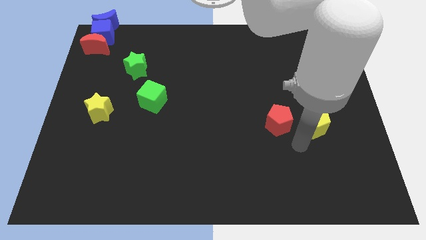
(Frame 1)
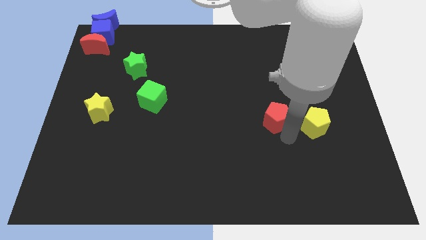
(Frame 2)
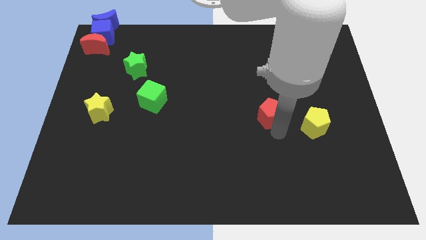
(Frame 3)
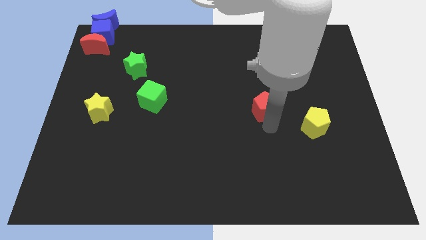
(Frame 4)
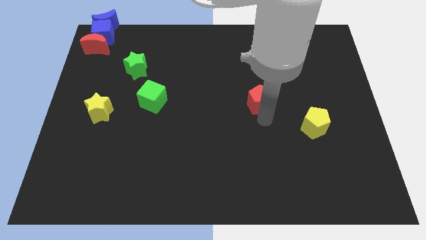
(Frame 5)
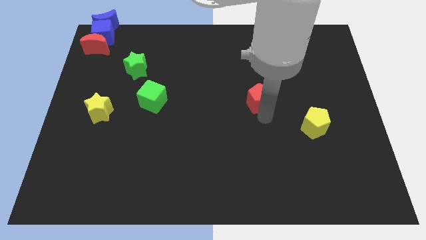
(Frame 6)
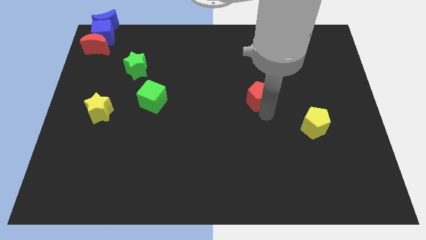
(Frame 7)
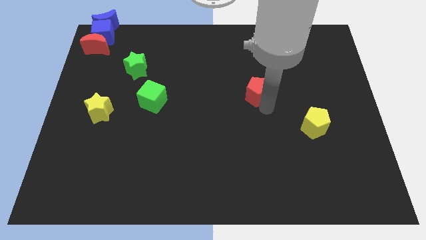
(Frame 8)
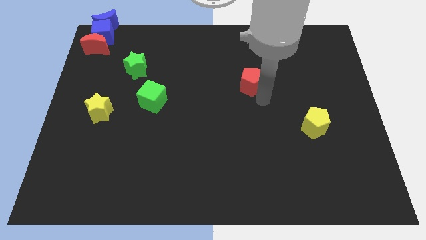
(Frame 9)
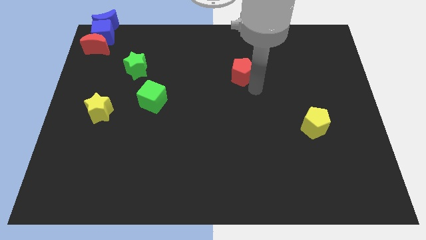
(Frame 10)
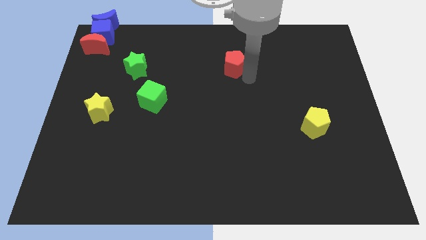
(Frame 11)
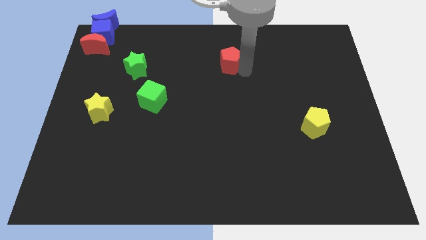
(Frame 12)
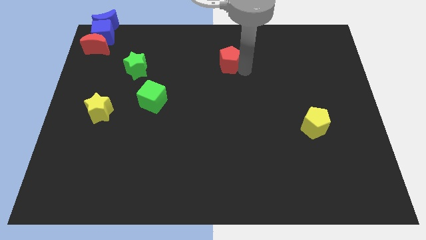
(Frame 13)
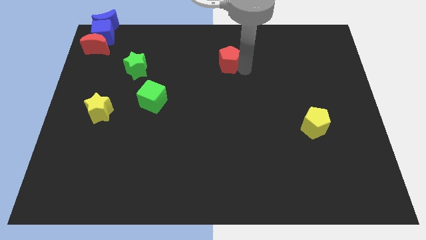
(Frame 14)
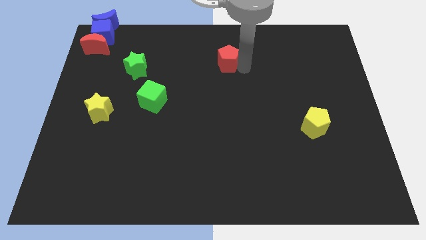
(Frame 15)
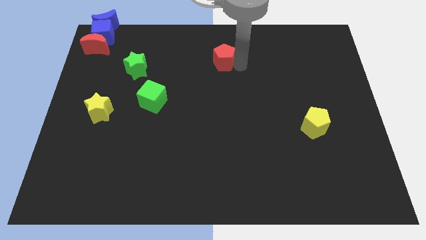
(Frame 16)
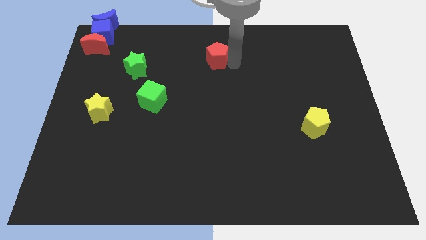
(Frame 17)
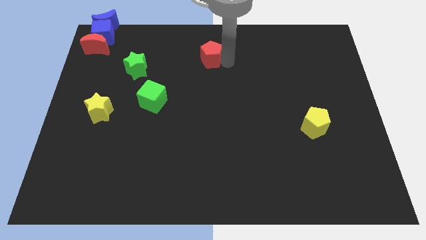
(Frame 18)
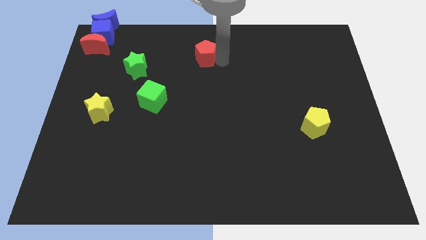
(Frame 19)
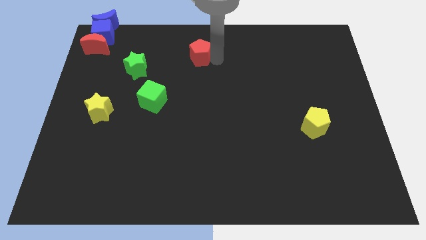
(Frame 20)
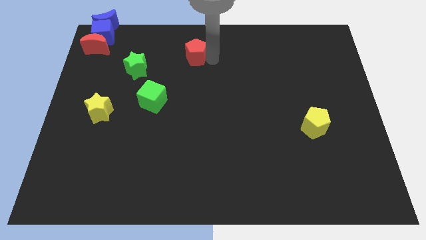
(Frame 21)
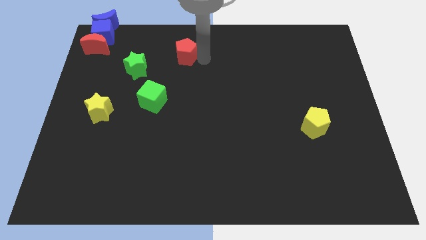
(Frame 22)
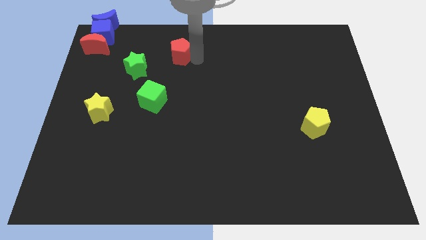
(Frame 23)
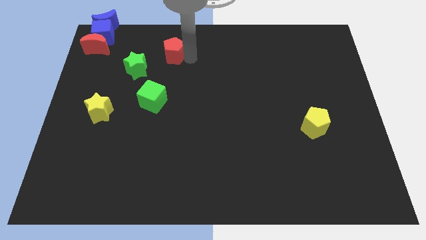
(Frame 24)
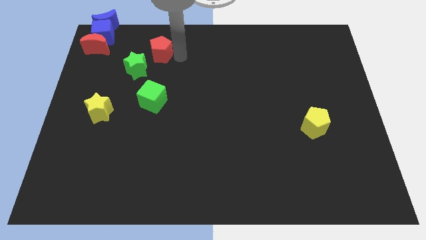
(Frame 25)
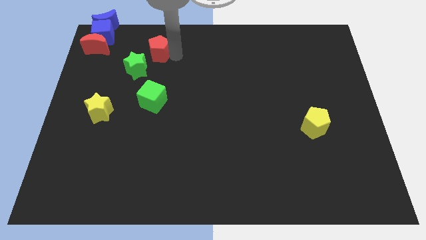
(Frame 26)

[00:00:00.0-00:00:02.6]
push red pentagon above green cube

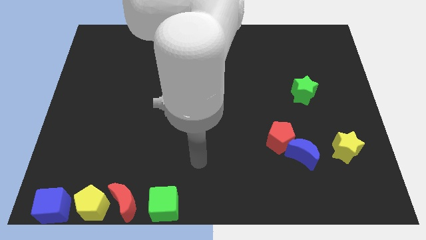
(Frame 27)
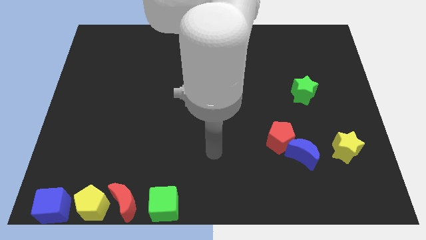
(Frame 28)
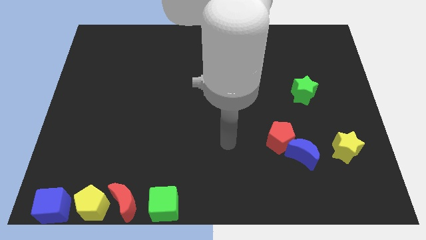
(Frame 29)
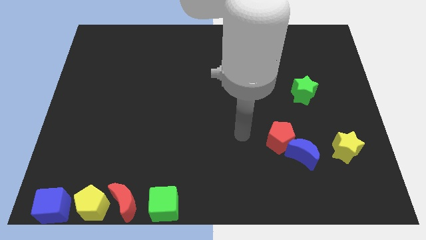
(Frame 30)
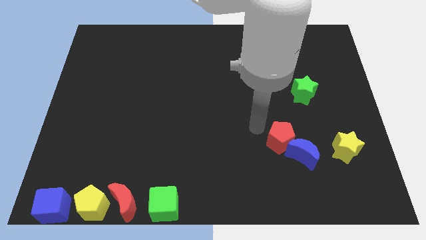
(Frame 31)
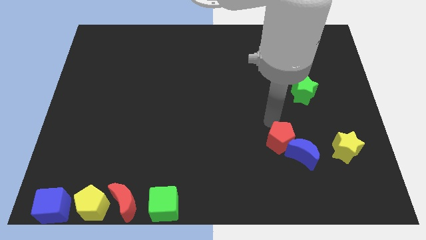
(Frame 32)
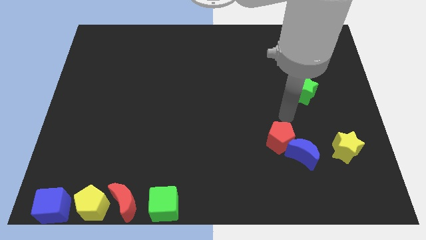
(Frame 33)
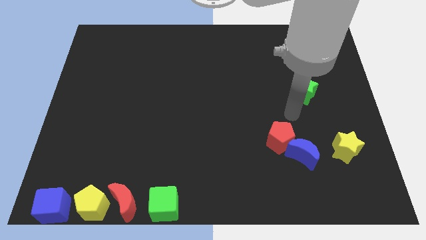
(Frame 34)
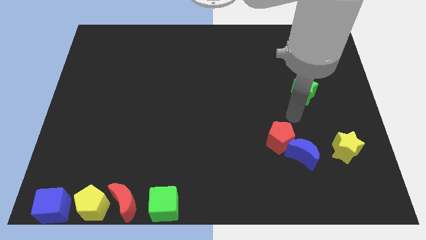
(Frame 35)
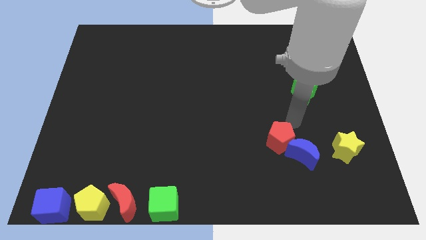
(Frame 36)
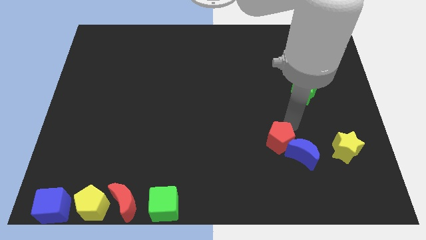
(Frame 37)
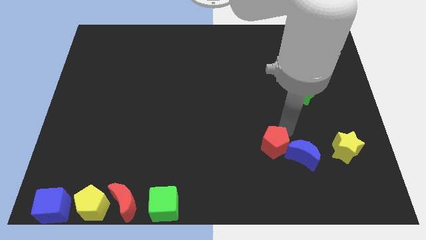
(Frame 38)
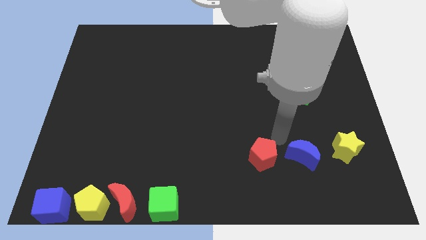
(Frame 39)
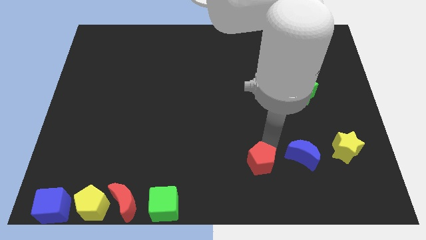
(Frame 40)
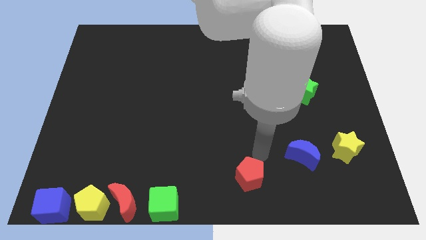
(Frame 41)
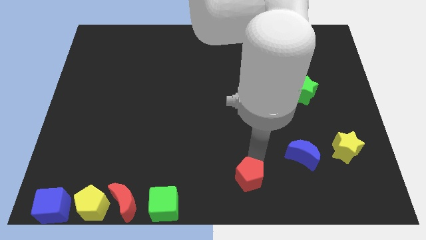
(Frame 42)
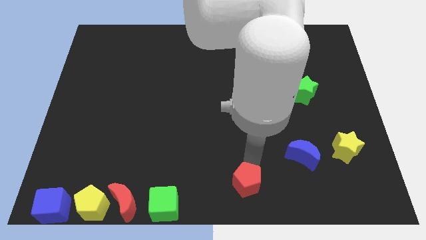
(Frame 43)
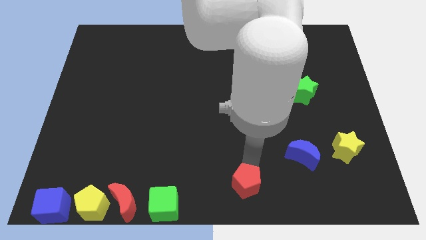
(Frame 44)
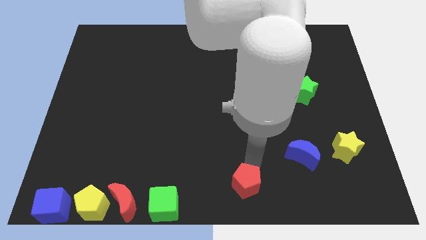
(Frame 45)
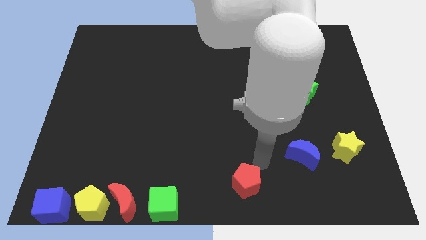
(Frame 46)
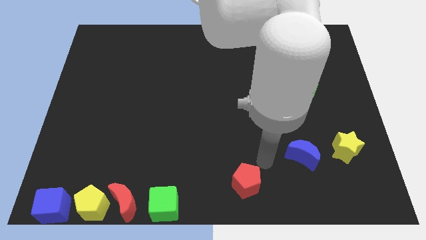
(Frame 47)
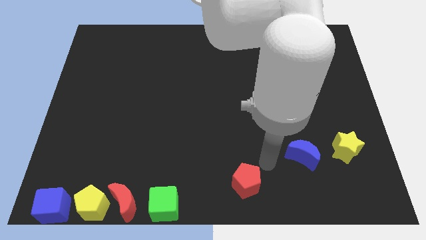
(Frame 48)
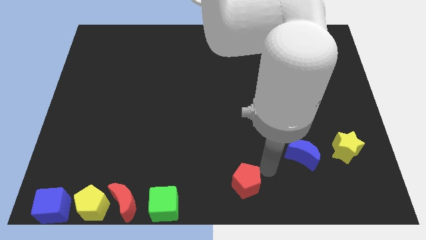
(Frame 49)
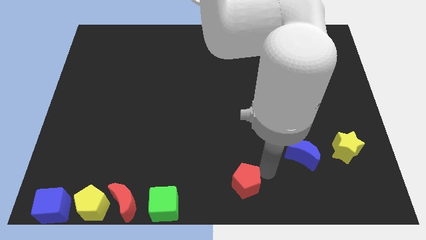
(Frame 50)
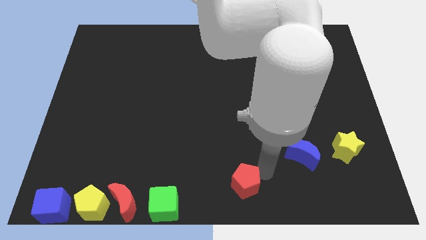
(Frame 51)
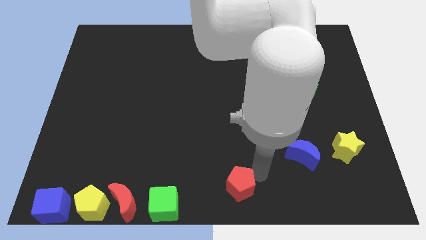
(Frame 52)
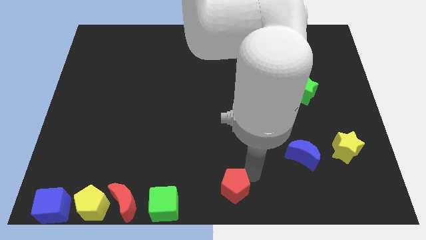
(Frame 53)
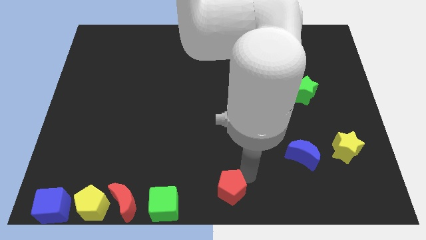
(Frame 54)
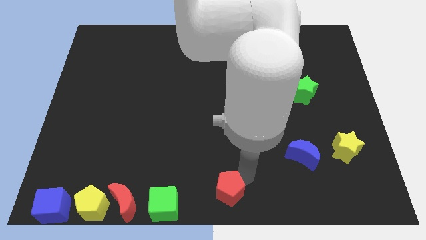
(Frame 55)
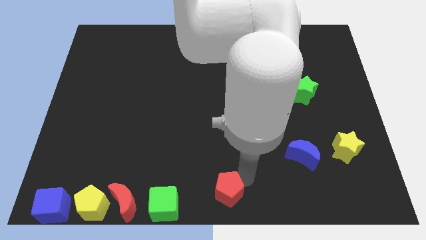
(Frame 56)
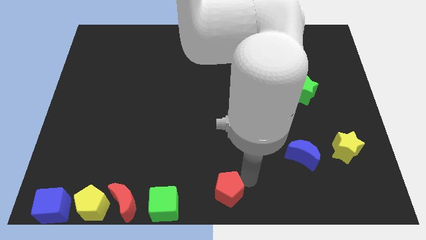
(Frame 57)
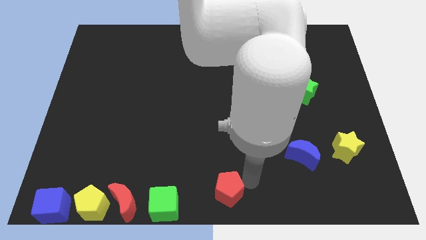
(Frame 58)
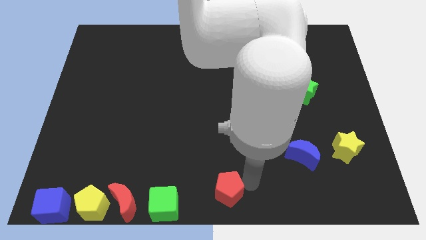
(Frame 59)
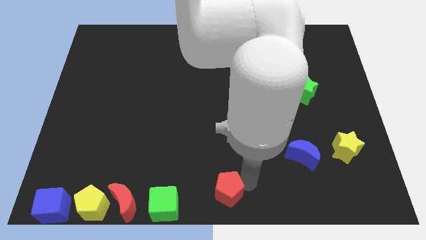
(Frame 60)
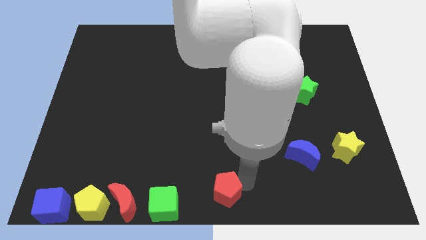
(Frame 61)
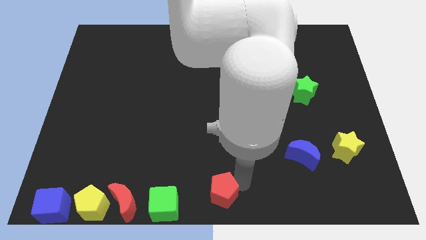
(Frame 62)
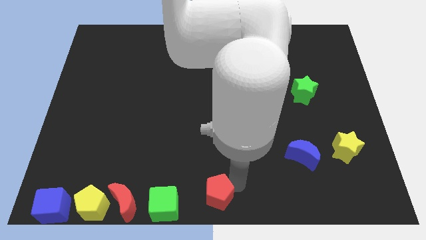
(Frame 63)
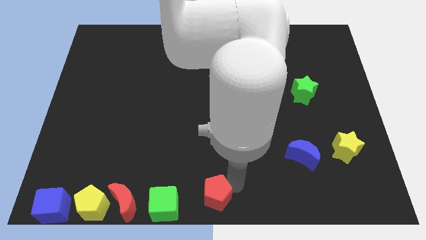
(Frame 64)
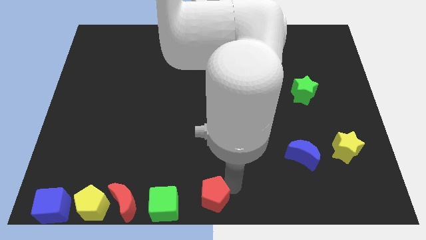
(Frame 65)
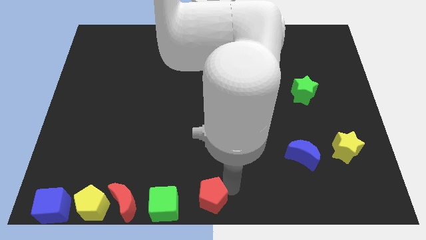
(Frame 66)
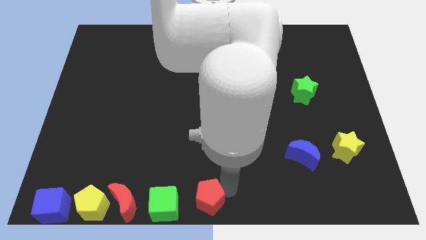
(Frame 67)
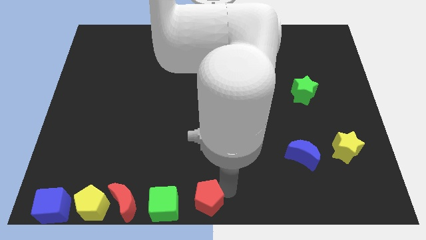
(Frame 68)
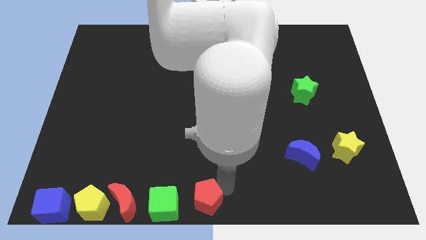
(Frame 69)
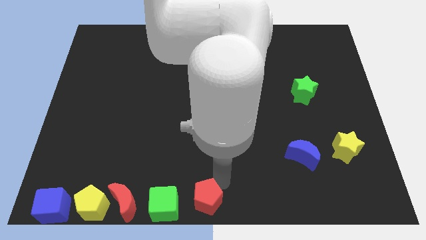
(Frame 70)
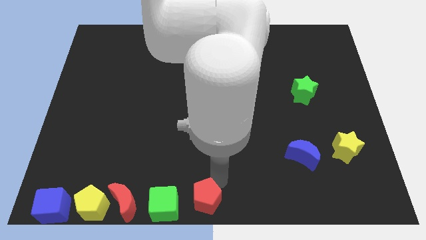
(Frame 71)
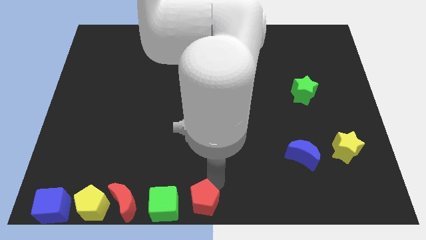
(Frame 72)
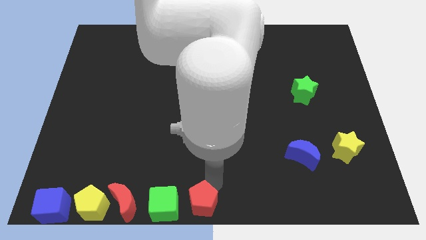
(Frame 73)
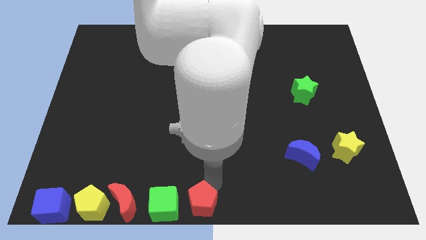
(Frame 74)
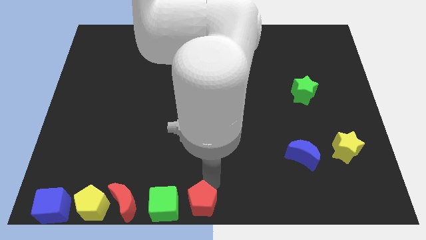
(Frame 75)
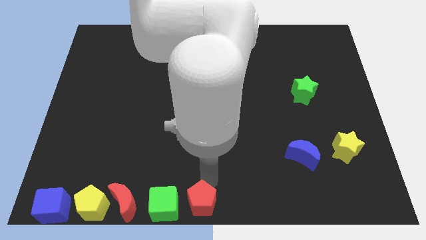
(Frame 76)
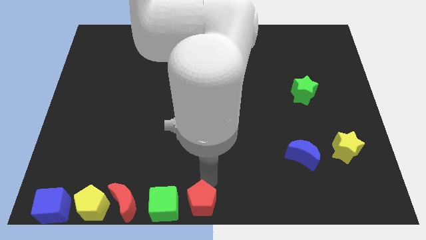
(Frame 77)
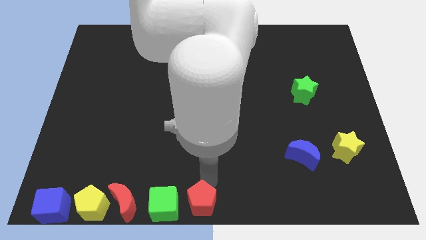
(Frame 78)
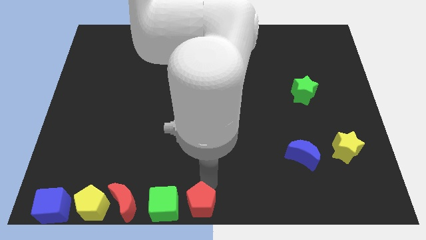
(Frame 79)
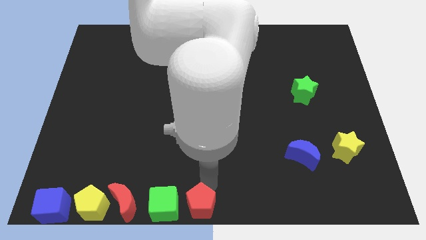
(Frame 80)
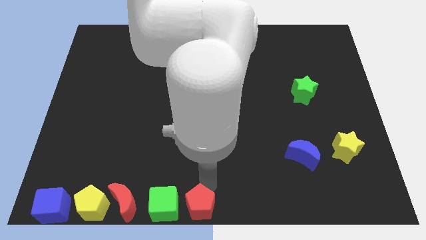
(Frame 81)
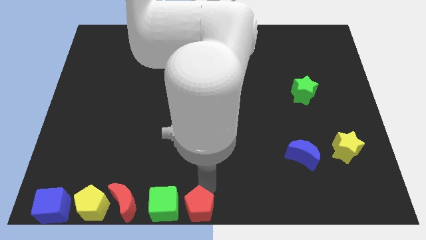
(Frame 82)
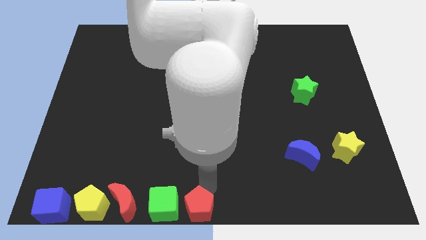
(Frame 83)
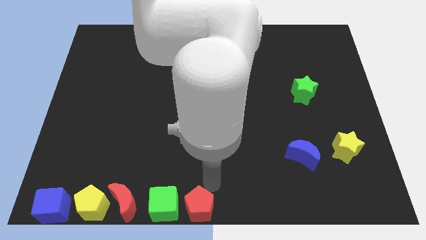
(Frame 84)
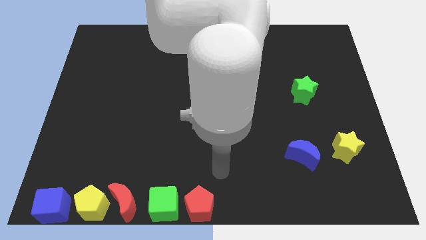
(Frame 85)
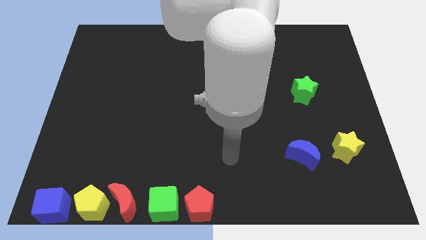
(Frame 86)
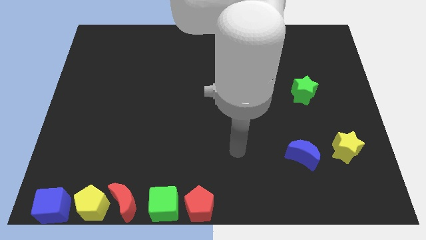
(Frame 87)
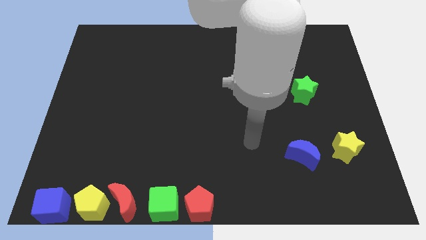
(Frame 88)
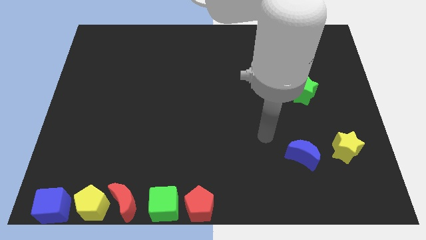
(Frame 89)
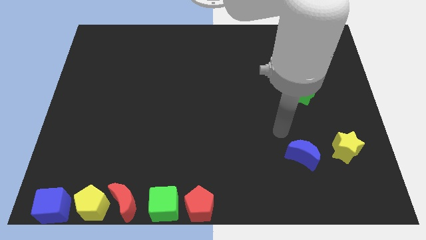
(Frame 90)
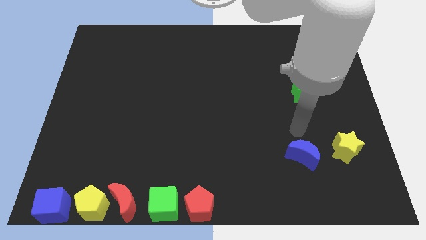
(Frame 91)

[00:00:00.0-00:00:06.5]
move the red pentagon to the bottom center
